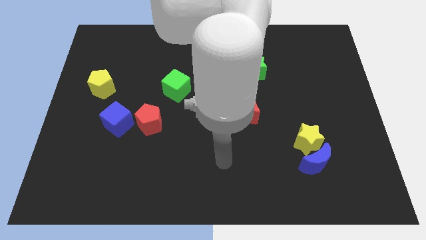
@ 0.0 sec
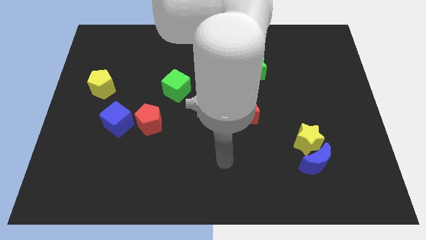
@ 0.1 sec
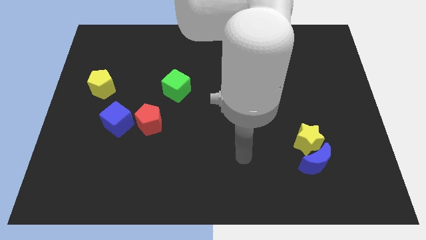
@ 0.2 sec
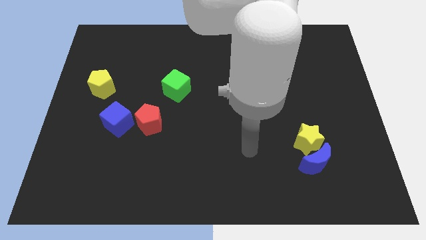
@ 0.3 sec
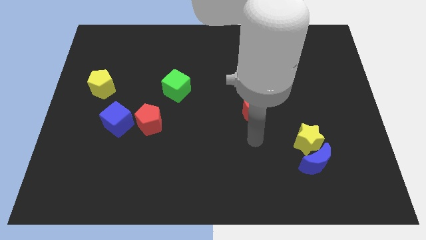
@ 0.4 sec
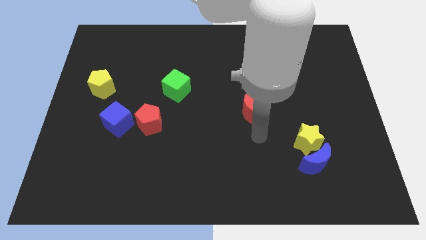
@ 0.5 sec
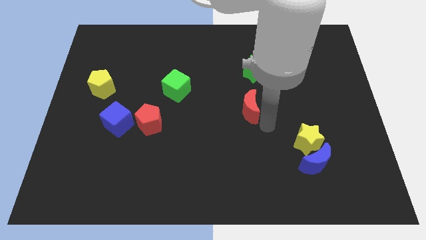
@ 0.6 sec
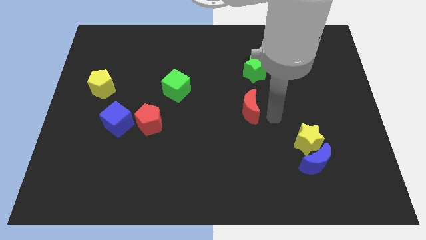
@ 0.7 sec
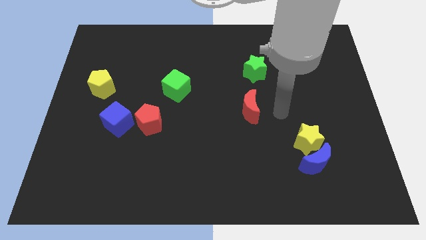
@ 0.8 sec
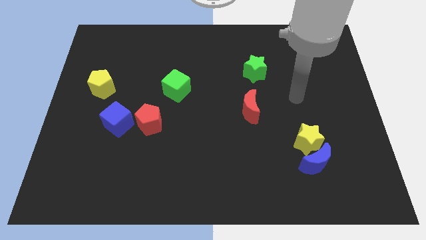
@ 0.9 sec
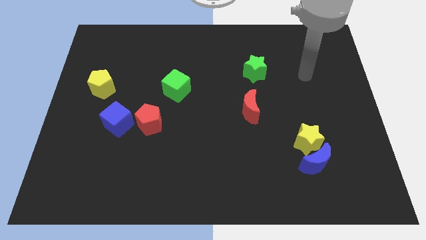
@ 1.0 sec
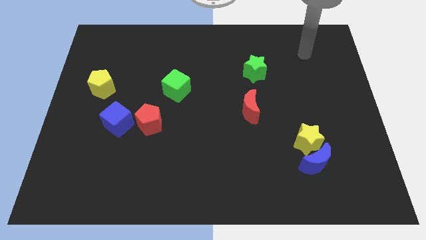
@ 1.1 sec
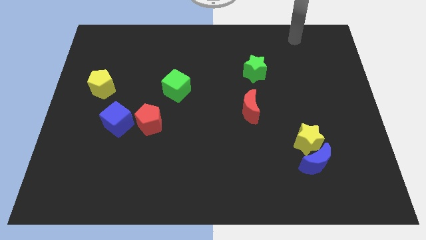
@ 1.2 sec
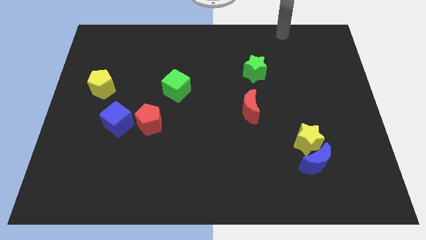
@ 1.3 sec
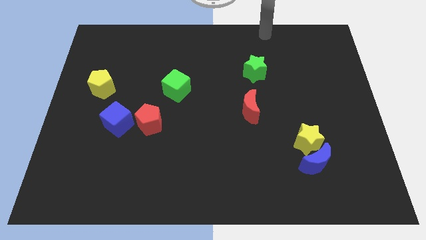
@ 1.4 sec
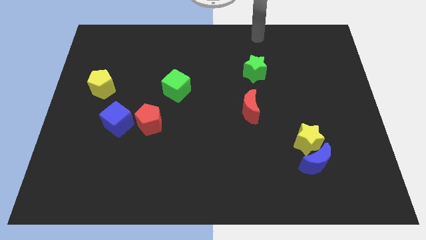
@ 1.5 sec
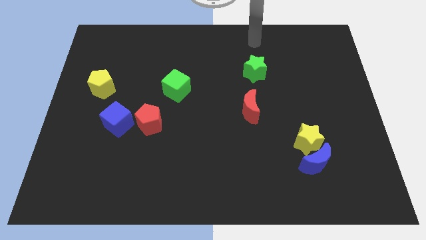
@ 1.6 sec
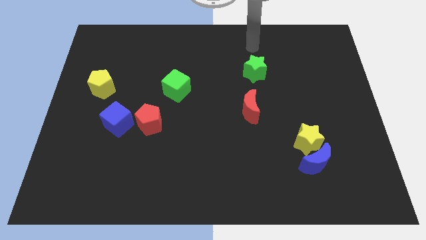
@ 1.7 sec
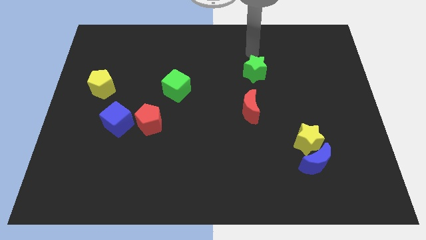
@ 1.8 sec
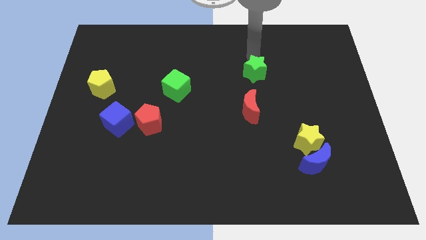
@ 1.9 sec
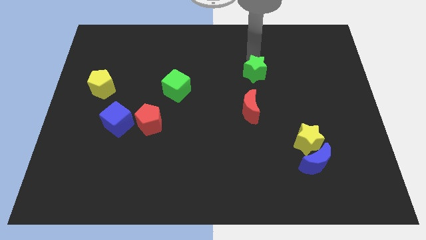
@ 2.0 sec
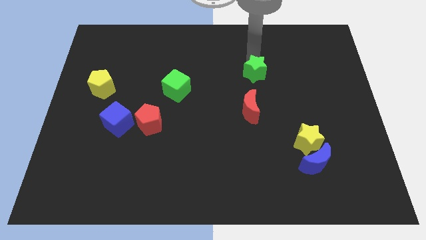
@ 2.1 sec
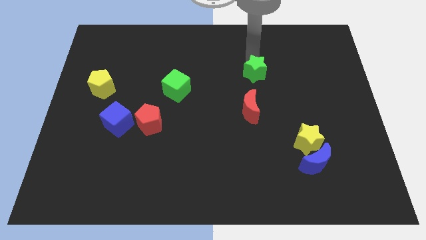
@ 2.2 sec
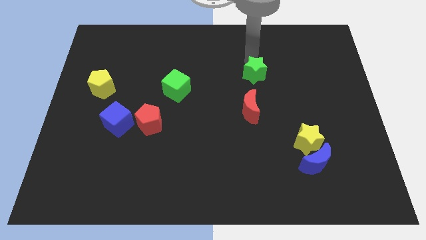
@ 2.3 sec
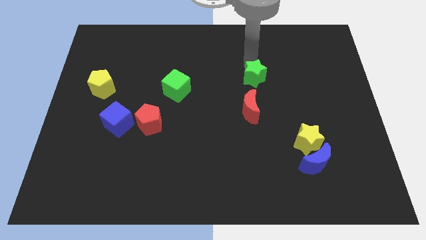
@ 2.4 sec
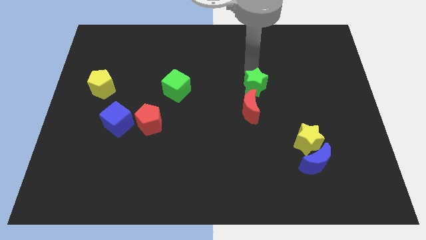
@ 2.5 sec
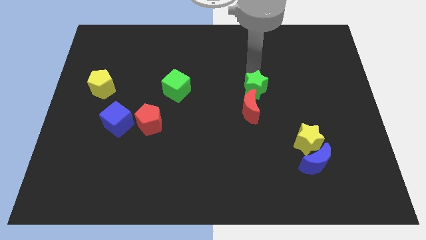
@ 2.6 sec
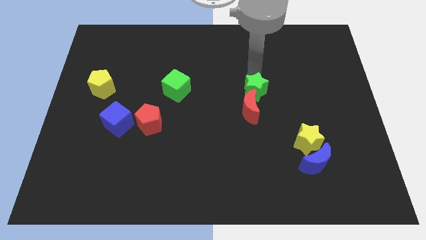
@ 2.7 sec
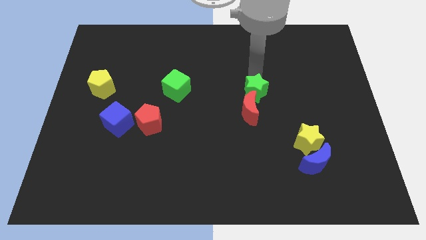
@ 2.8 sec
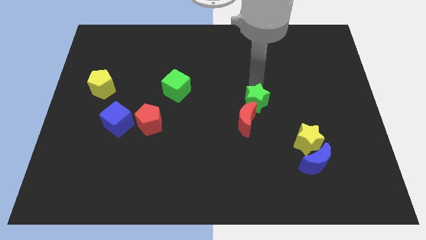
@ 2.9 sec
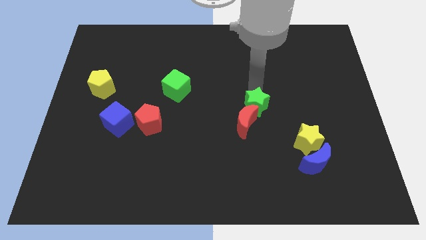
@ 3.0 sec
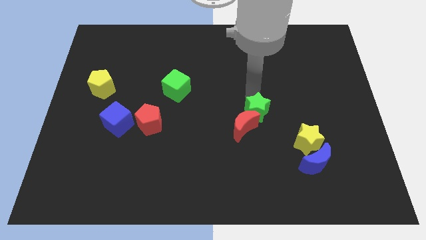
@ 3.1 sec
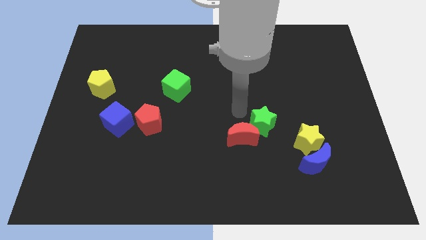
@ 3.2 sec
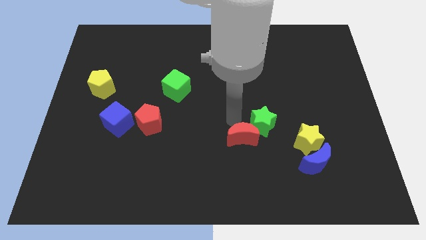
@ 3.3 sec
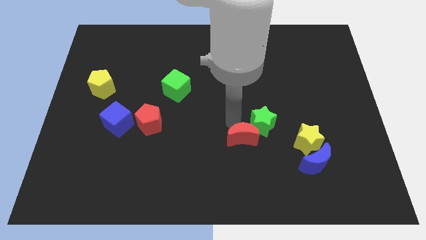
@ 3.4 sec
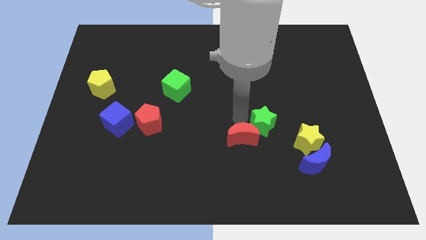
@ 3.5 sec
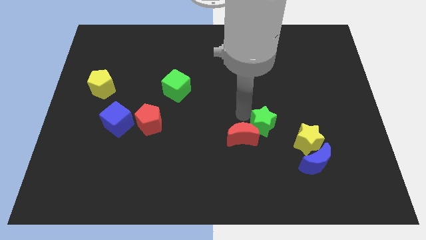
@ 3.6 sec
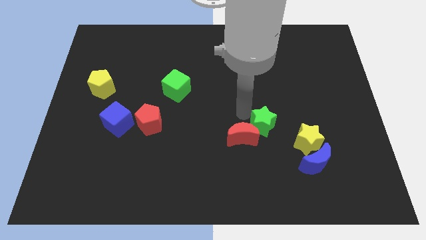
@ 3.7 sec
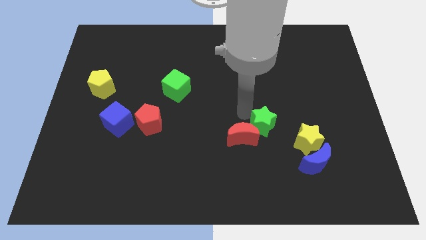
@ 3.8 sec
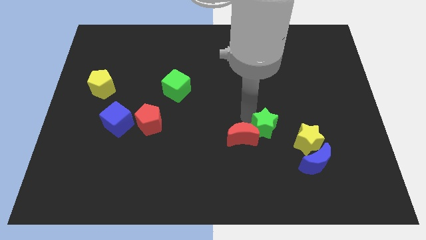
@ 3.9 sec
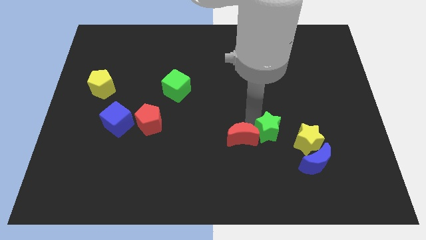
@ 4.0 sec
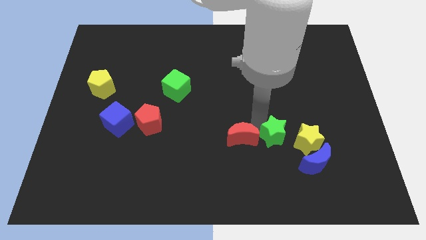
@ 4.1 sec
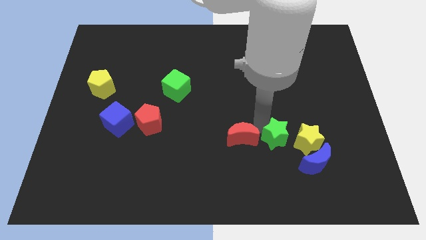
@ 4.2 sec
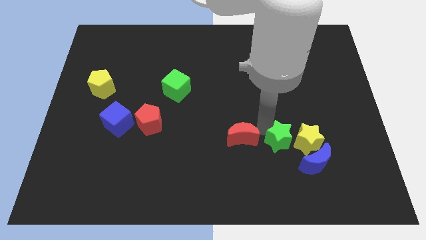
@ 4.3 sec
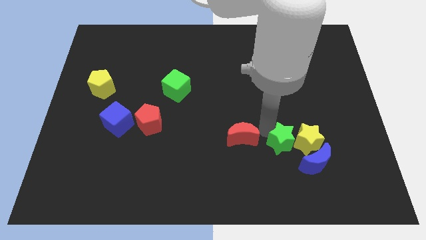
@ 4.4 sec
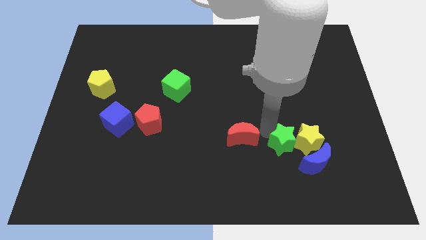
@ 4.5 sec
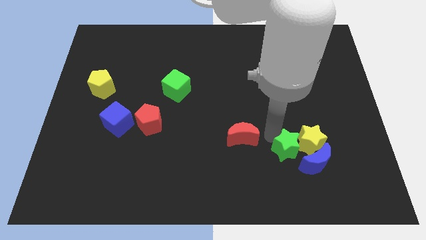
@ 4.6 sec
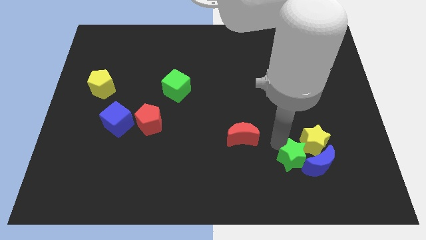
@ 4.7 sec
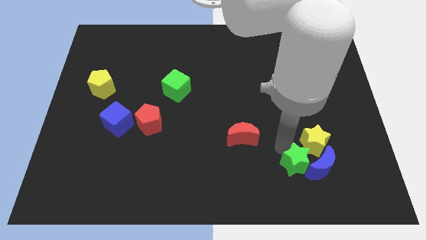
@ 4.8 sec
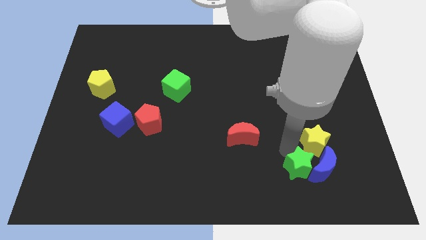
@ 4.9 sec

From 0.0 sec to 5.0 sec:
move the green star next to the blue moon

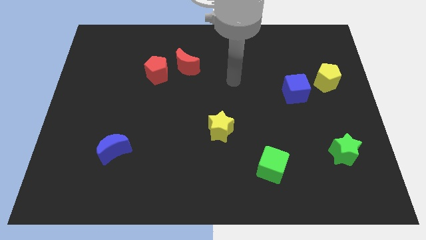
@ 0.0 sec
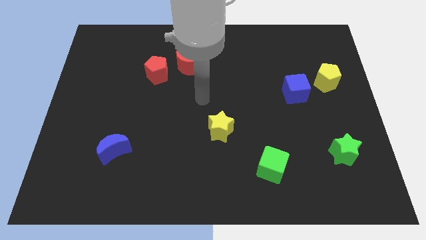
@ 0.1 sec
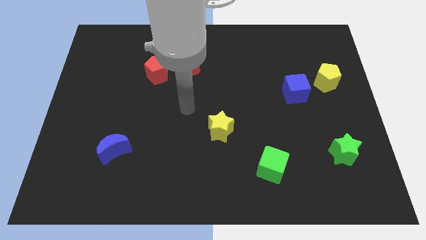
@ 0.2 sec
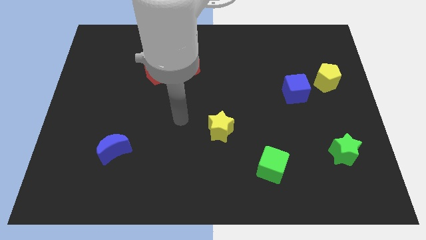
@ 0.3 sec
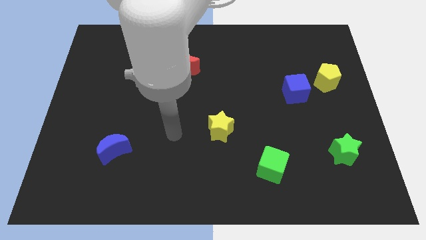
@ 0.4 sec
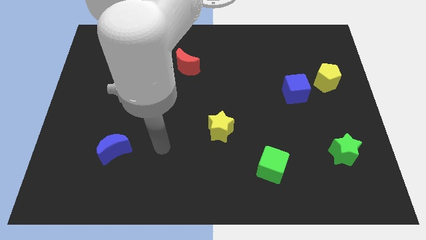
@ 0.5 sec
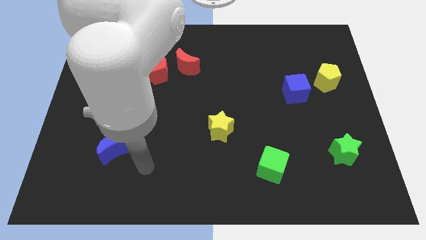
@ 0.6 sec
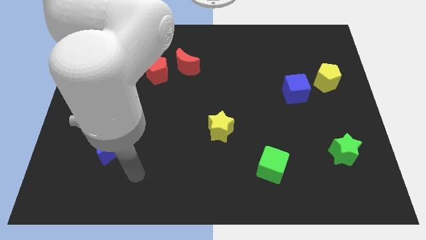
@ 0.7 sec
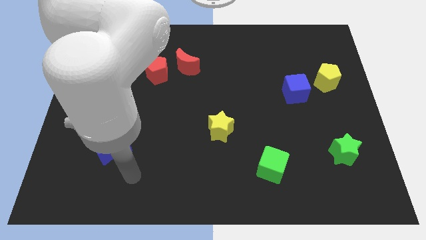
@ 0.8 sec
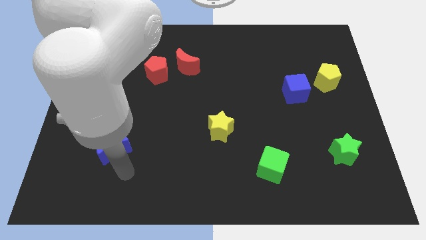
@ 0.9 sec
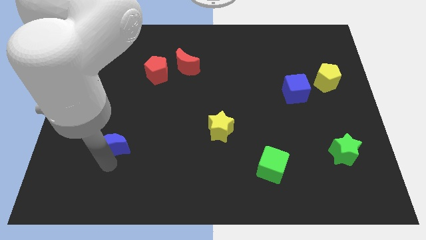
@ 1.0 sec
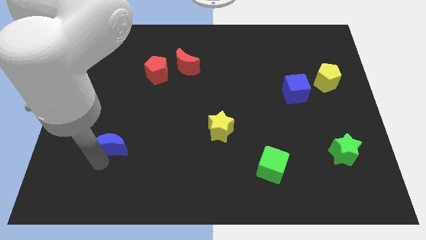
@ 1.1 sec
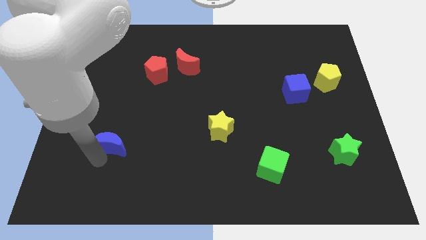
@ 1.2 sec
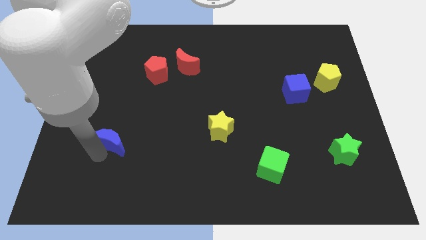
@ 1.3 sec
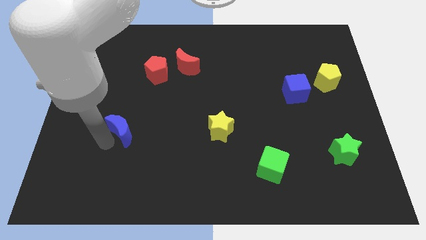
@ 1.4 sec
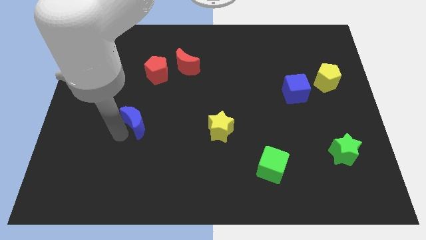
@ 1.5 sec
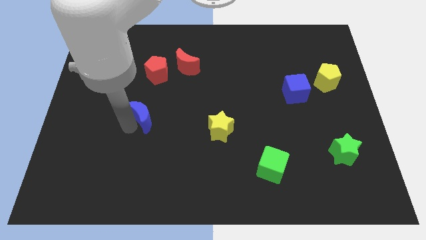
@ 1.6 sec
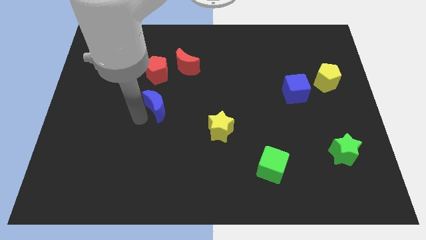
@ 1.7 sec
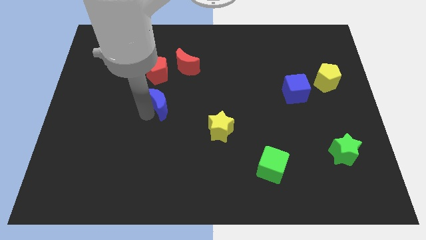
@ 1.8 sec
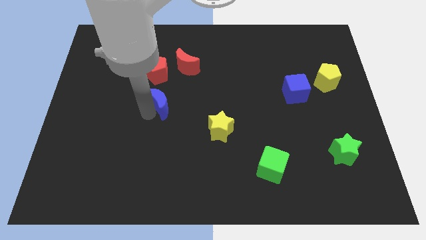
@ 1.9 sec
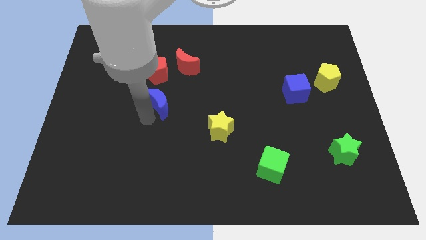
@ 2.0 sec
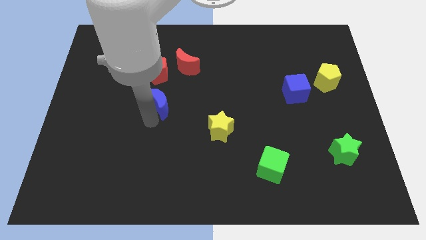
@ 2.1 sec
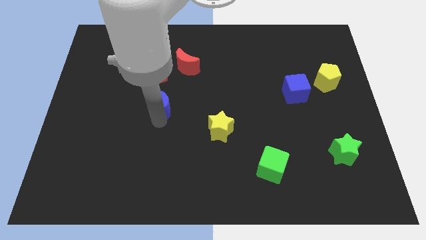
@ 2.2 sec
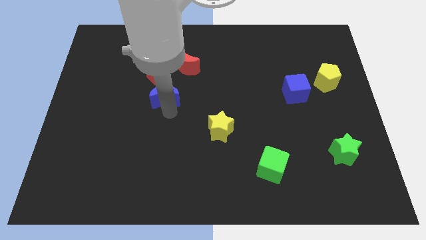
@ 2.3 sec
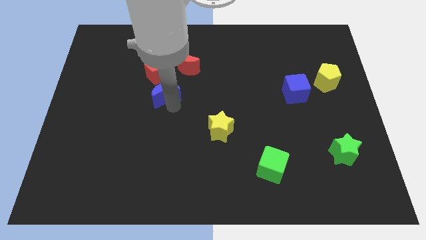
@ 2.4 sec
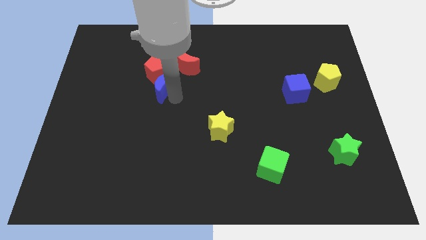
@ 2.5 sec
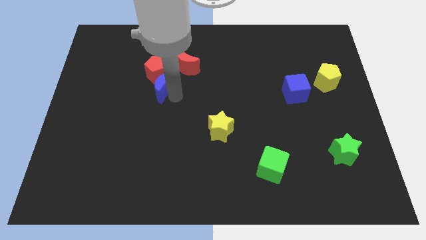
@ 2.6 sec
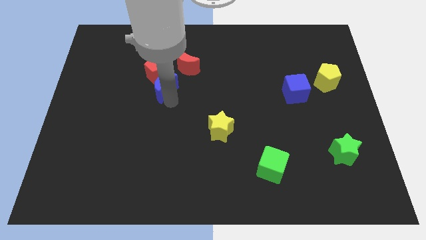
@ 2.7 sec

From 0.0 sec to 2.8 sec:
slide the blue moon close to the red pentagon

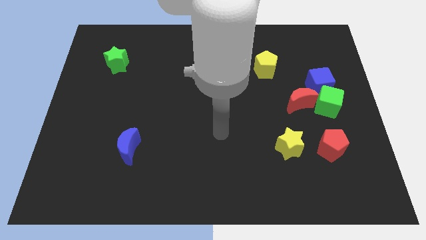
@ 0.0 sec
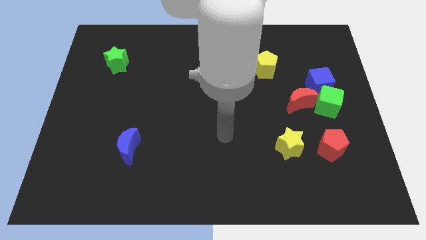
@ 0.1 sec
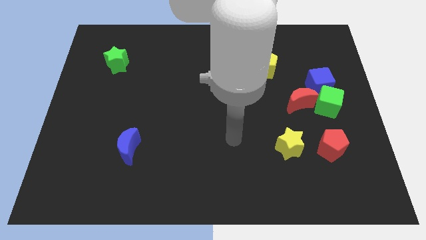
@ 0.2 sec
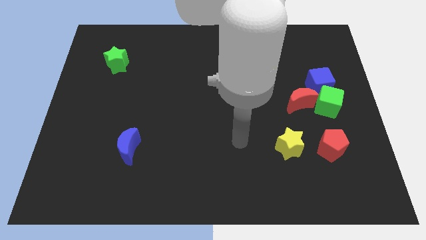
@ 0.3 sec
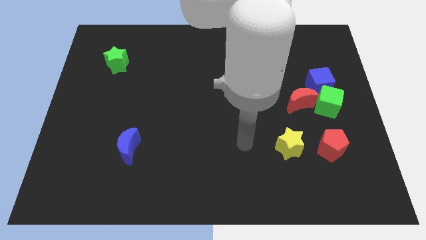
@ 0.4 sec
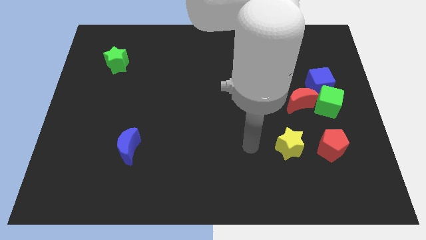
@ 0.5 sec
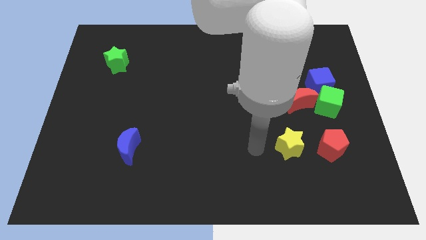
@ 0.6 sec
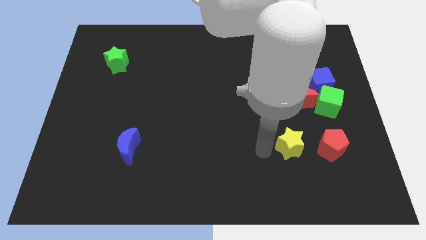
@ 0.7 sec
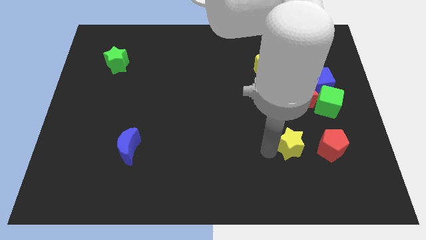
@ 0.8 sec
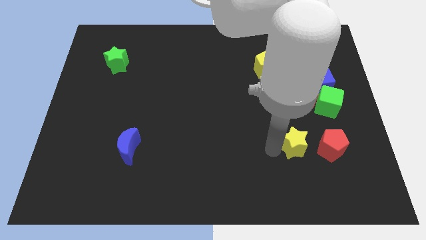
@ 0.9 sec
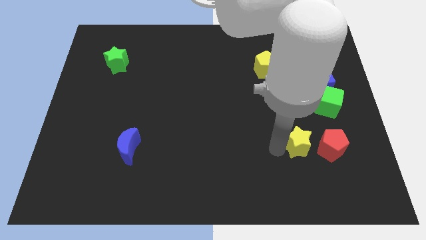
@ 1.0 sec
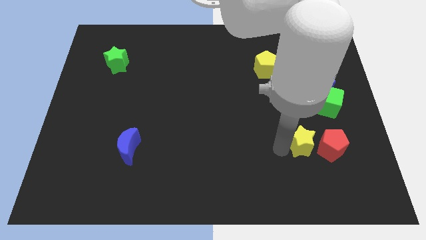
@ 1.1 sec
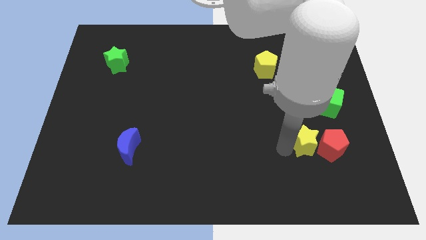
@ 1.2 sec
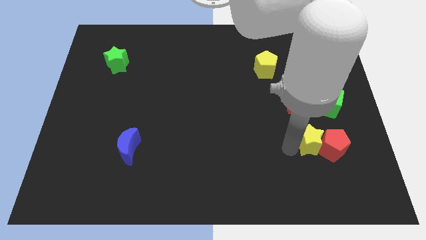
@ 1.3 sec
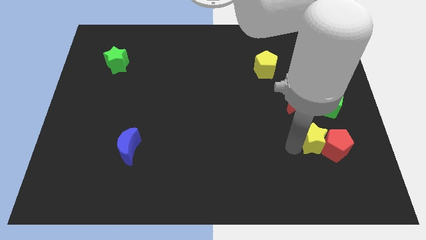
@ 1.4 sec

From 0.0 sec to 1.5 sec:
push the yellow star close to the red pentagon
